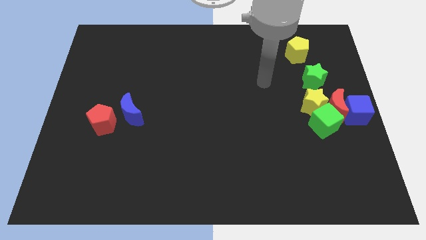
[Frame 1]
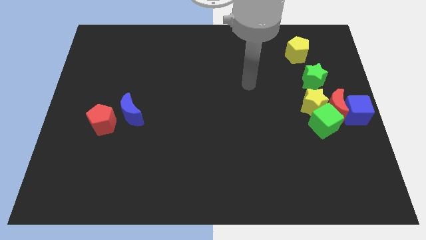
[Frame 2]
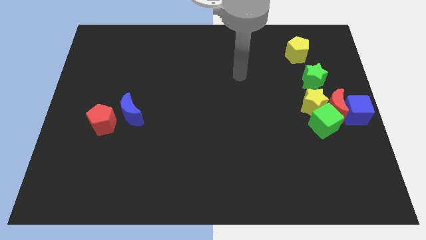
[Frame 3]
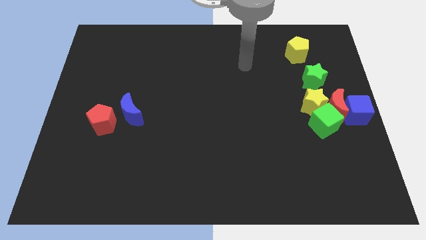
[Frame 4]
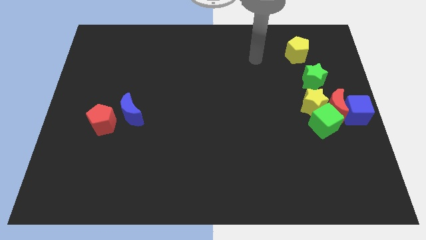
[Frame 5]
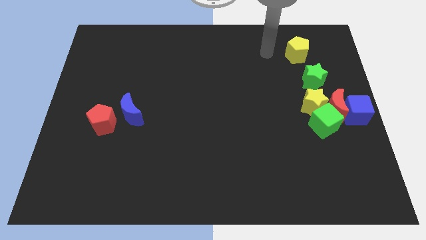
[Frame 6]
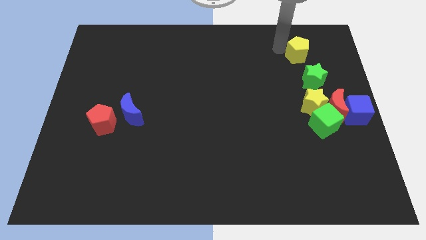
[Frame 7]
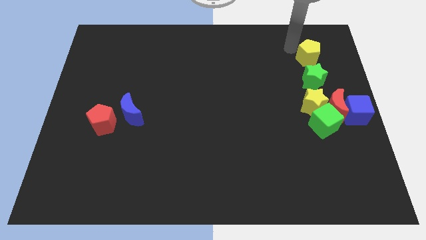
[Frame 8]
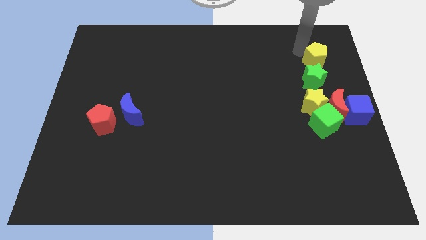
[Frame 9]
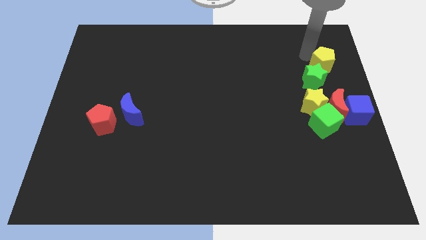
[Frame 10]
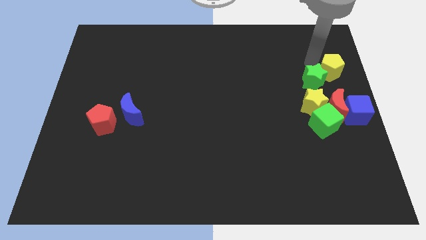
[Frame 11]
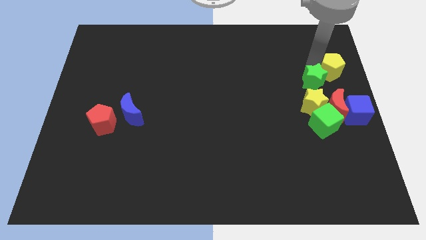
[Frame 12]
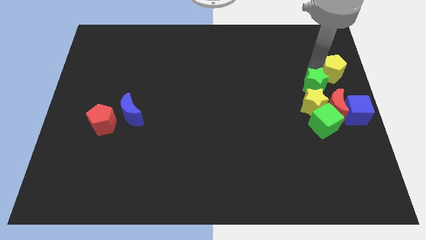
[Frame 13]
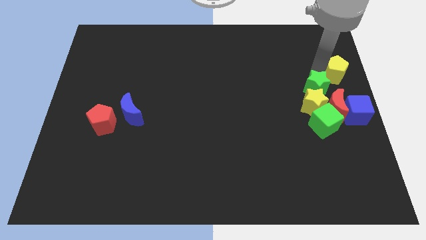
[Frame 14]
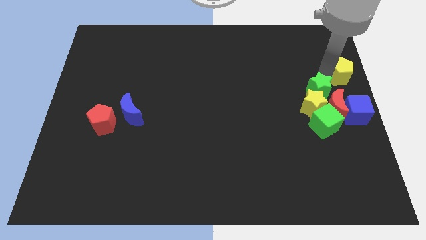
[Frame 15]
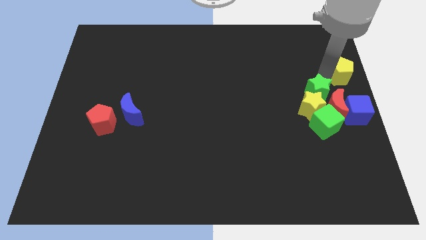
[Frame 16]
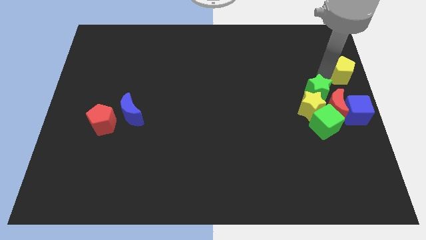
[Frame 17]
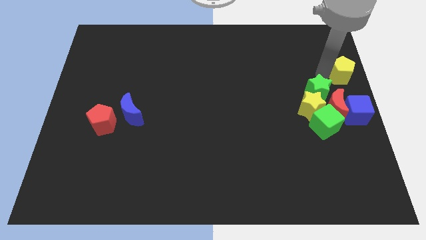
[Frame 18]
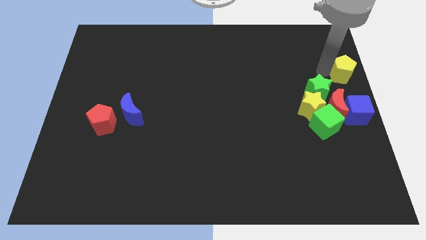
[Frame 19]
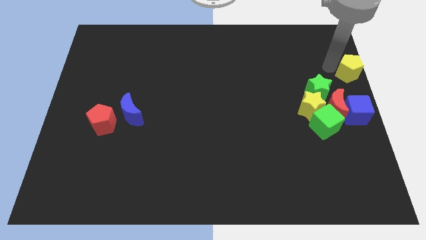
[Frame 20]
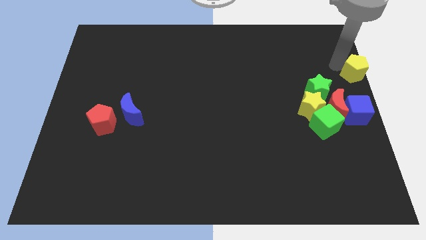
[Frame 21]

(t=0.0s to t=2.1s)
push yellow pentagon towards the top right

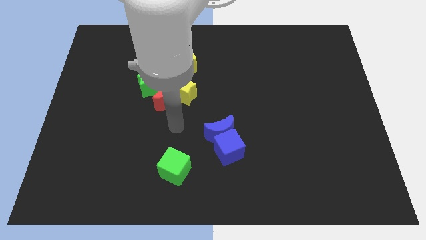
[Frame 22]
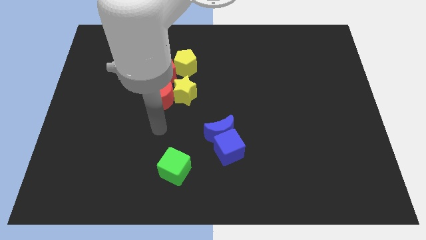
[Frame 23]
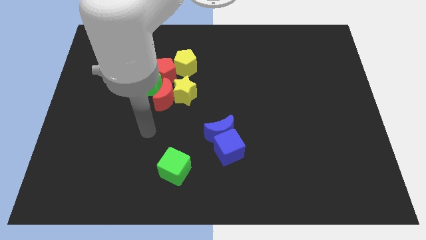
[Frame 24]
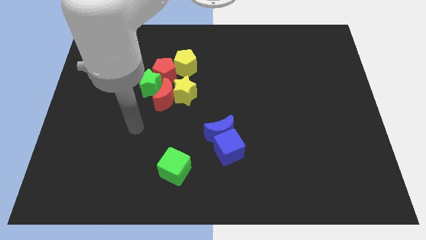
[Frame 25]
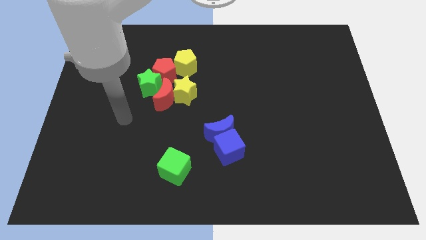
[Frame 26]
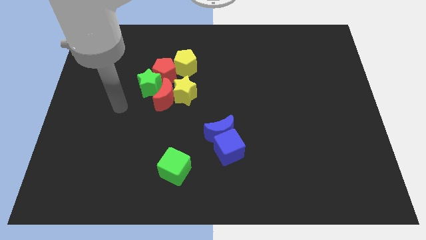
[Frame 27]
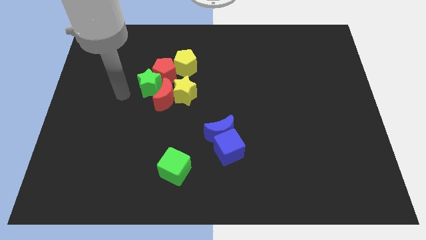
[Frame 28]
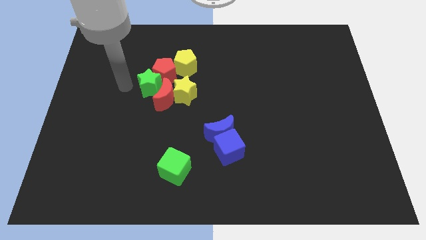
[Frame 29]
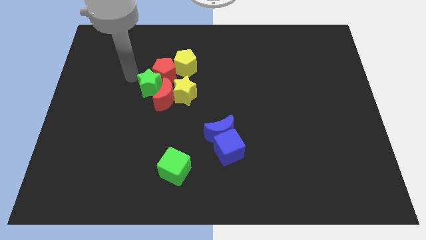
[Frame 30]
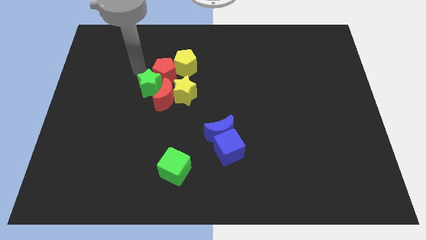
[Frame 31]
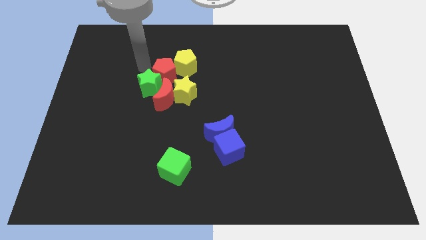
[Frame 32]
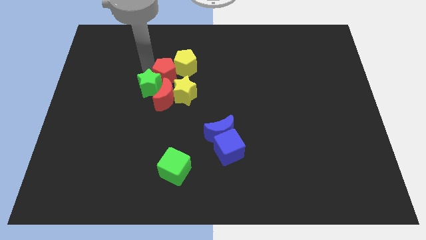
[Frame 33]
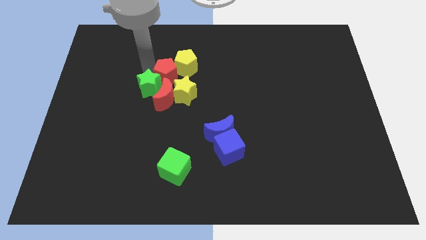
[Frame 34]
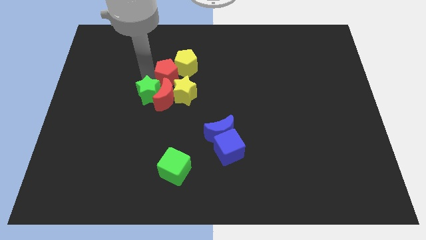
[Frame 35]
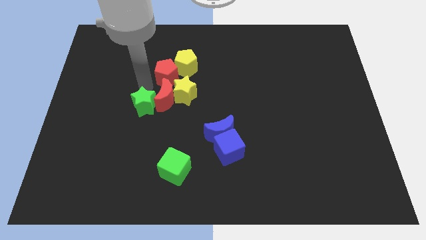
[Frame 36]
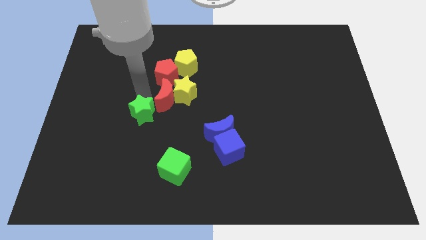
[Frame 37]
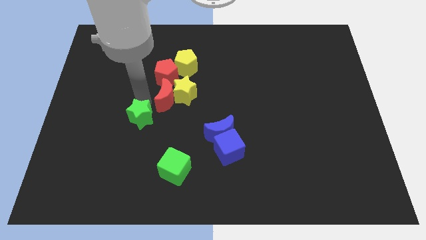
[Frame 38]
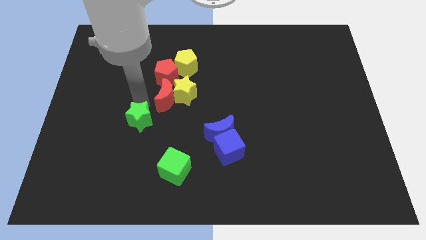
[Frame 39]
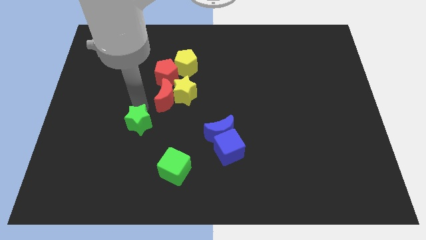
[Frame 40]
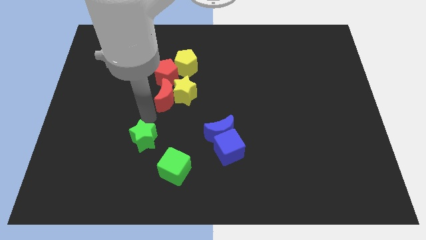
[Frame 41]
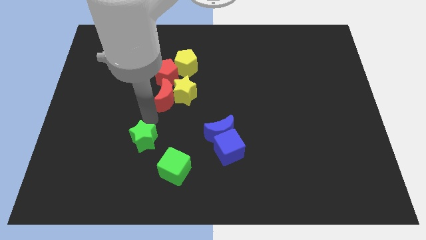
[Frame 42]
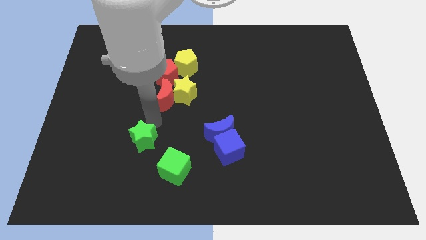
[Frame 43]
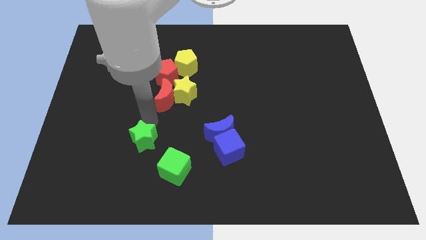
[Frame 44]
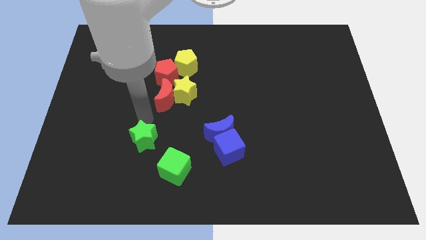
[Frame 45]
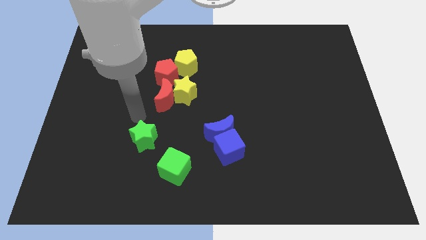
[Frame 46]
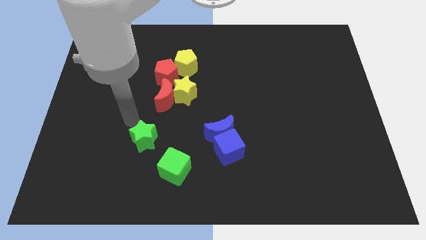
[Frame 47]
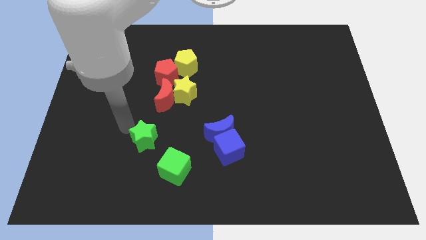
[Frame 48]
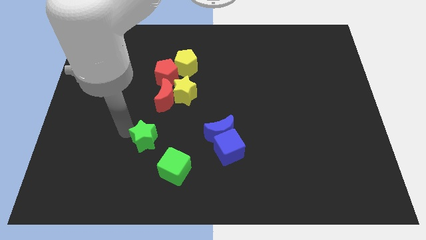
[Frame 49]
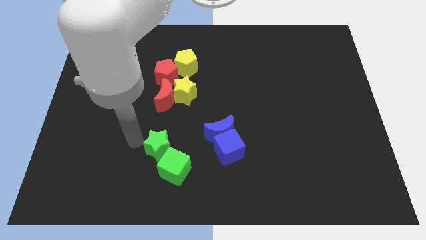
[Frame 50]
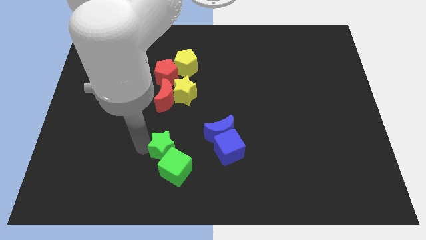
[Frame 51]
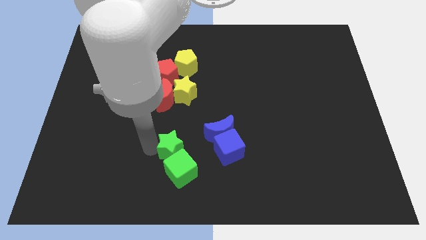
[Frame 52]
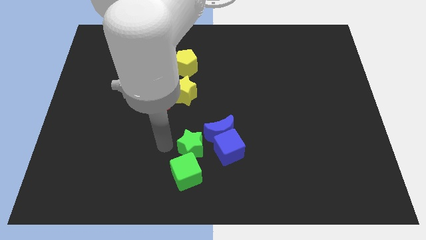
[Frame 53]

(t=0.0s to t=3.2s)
slide the green star into the green cube

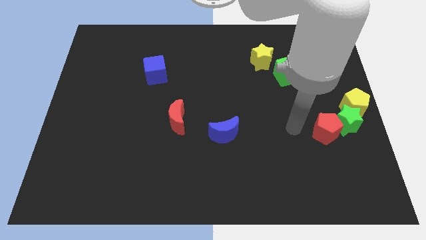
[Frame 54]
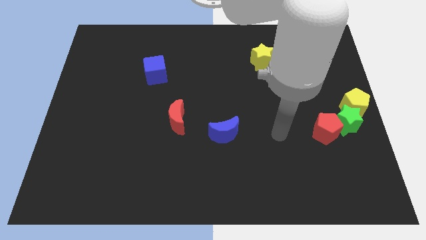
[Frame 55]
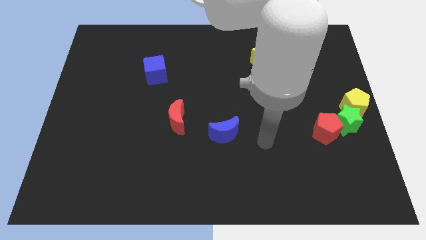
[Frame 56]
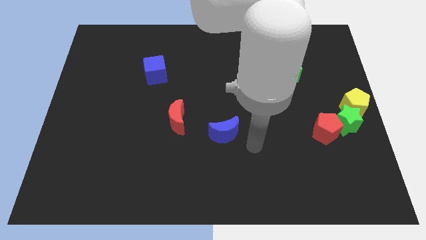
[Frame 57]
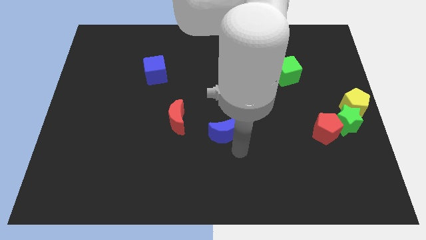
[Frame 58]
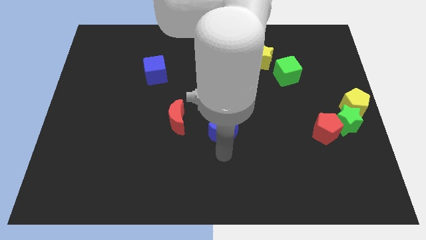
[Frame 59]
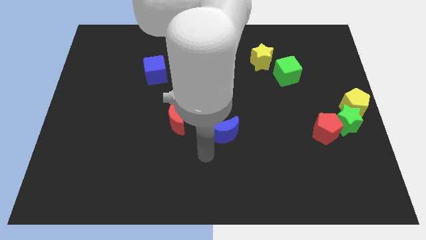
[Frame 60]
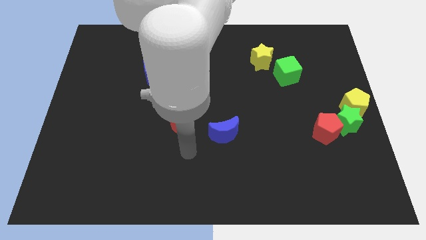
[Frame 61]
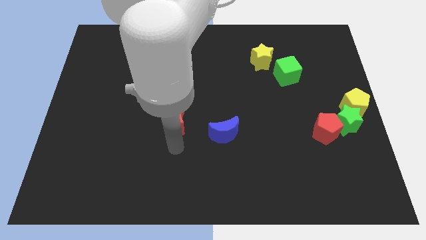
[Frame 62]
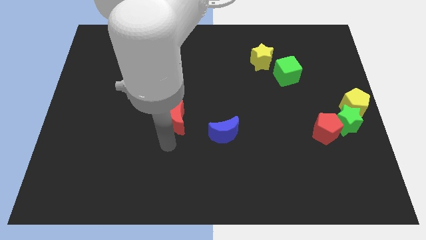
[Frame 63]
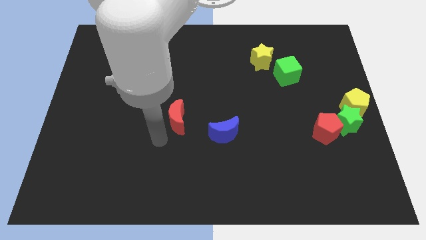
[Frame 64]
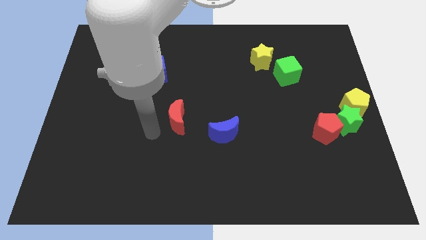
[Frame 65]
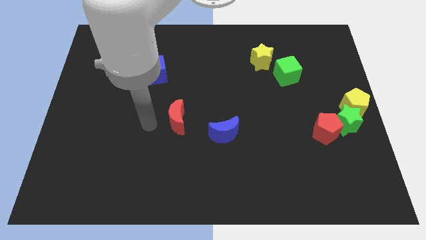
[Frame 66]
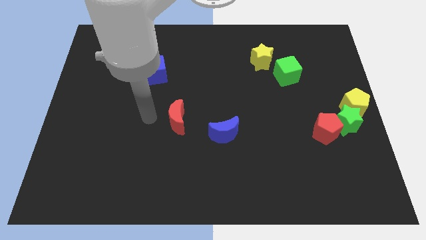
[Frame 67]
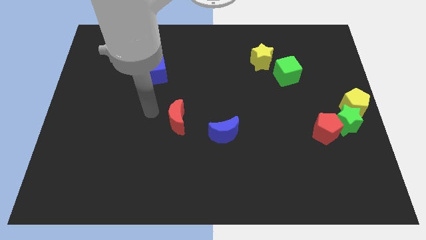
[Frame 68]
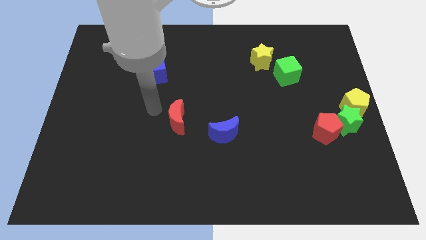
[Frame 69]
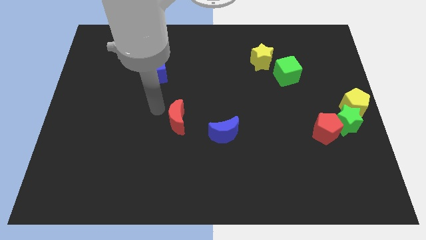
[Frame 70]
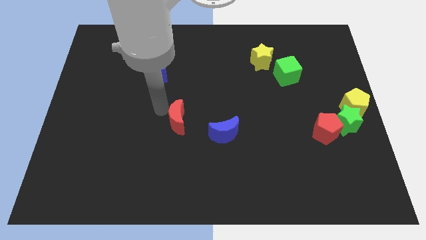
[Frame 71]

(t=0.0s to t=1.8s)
move the arm to the left of red crescent

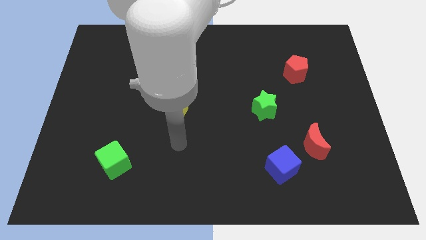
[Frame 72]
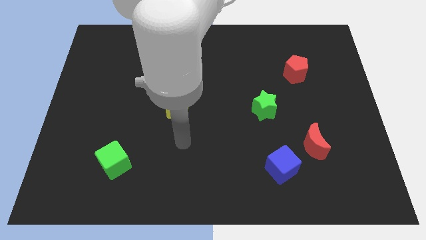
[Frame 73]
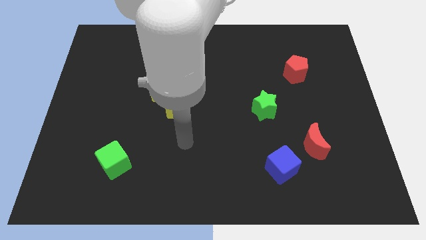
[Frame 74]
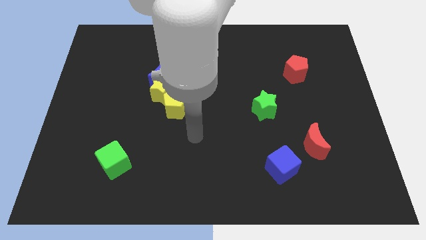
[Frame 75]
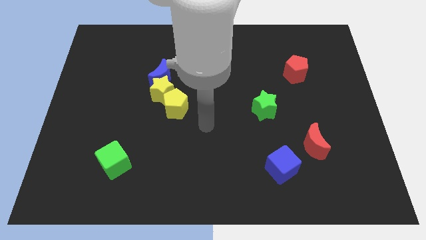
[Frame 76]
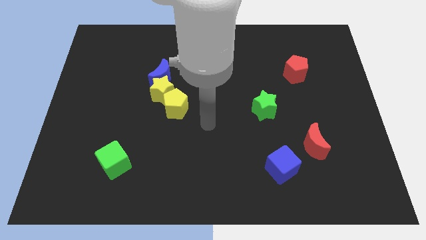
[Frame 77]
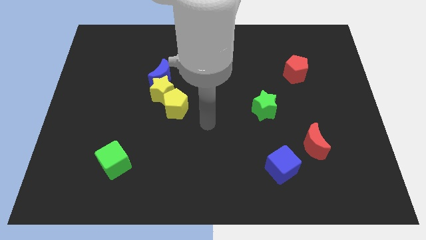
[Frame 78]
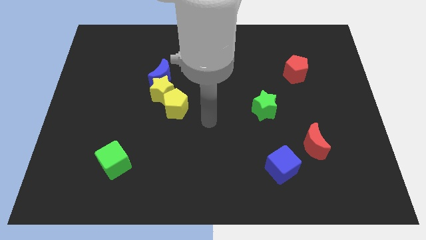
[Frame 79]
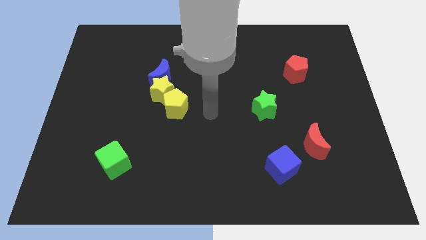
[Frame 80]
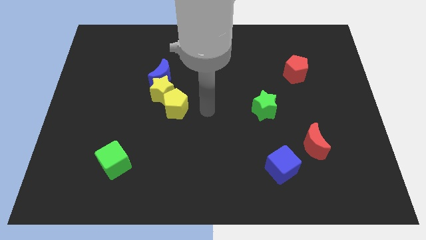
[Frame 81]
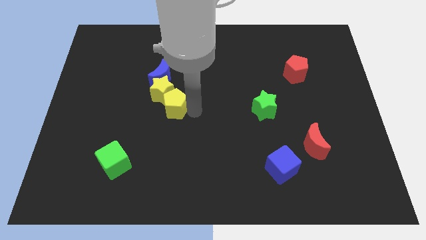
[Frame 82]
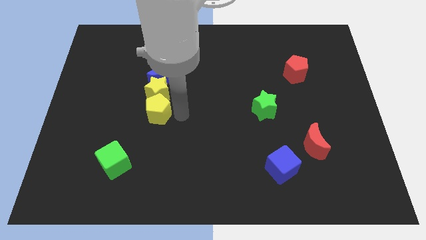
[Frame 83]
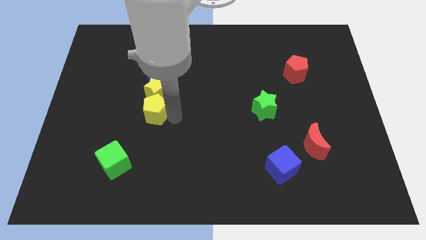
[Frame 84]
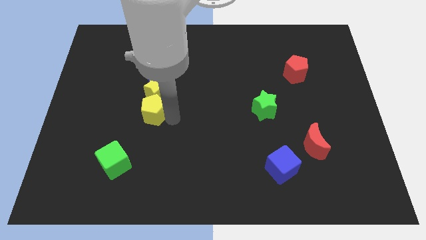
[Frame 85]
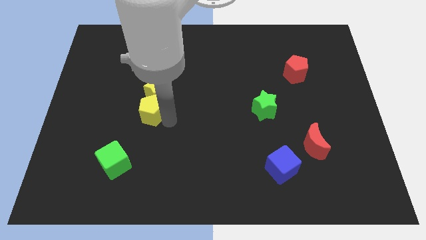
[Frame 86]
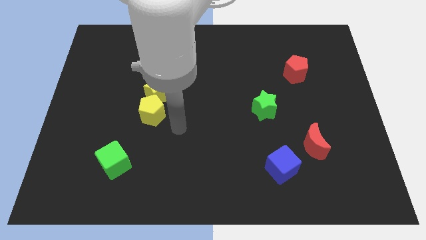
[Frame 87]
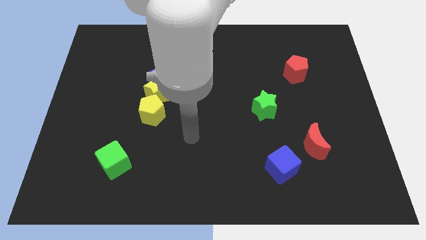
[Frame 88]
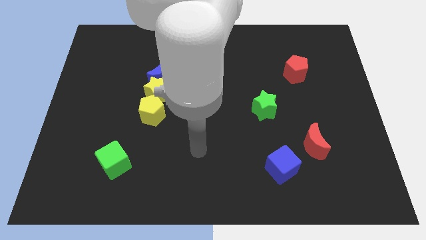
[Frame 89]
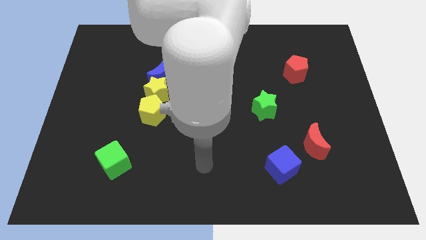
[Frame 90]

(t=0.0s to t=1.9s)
move yellow pentagon slightly left
